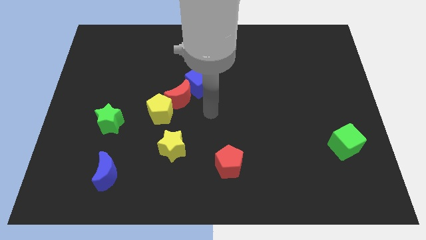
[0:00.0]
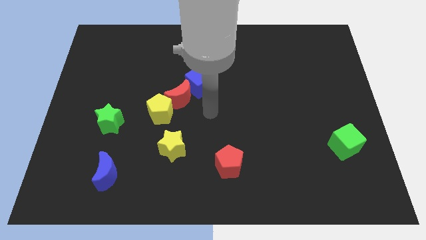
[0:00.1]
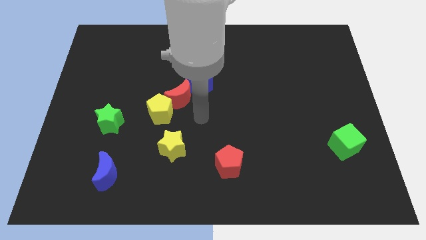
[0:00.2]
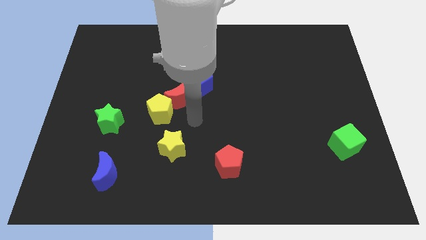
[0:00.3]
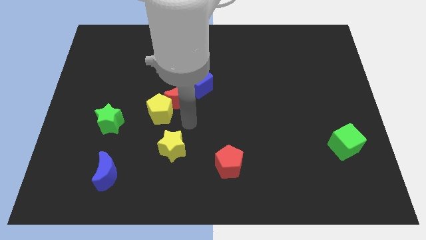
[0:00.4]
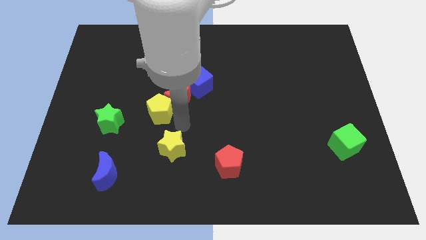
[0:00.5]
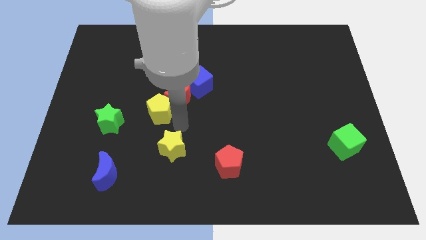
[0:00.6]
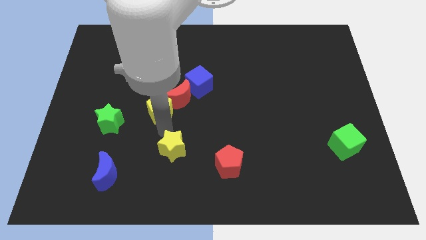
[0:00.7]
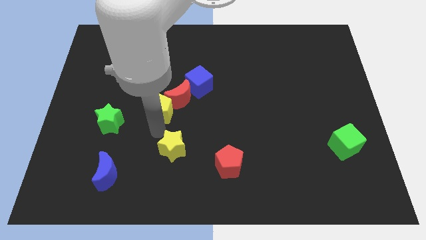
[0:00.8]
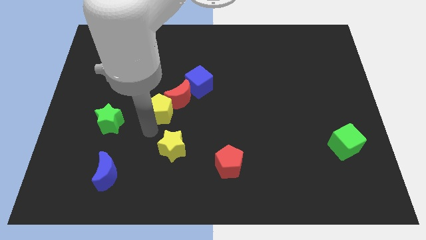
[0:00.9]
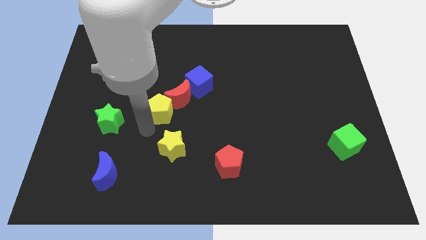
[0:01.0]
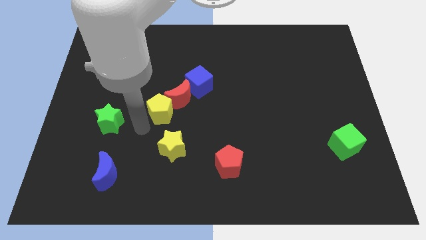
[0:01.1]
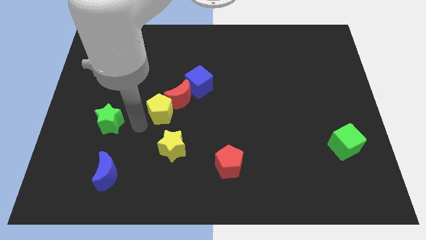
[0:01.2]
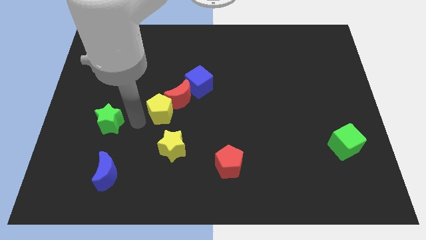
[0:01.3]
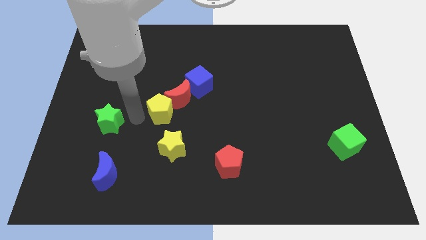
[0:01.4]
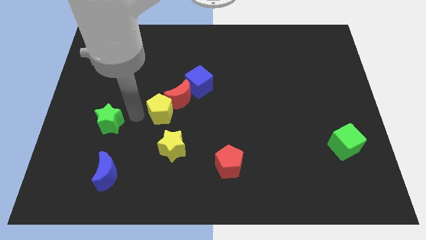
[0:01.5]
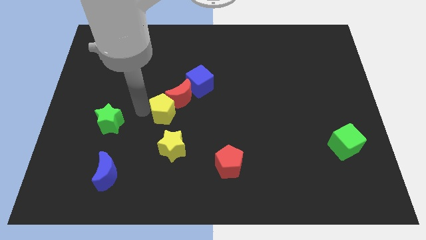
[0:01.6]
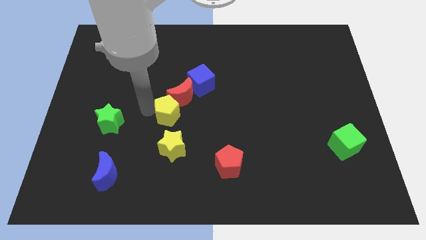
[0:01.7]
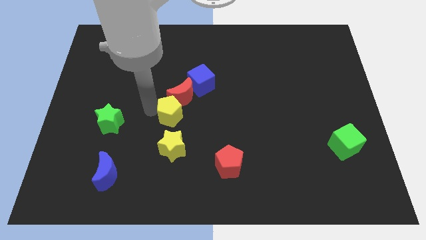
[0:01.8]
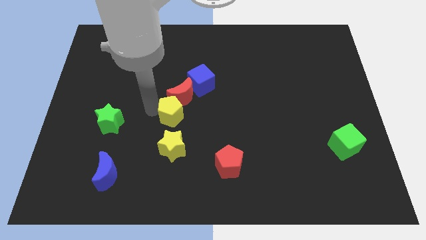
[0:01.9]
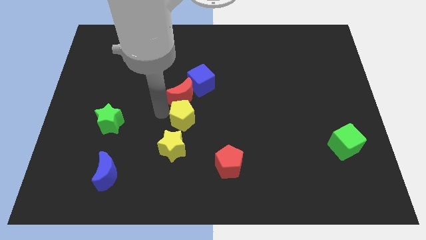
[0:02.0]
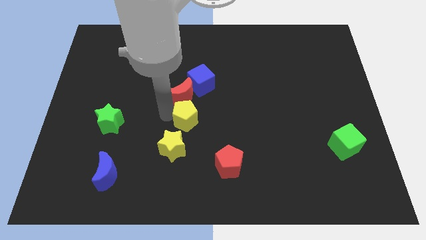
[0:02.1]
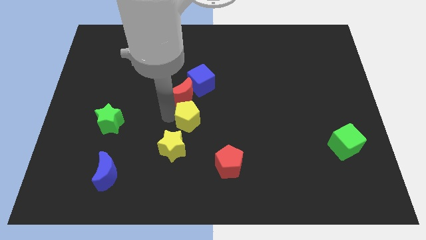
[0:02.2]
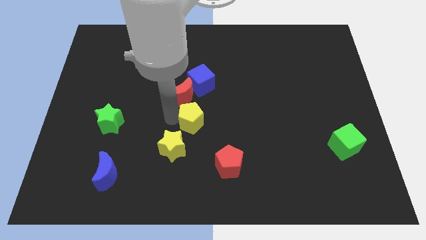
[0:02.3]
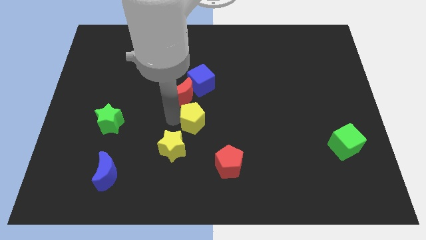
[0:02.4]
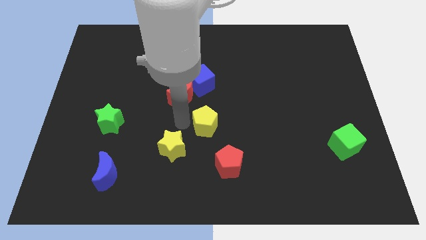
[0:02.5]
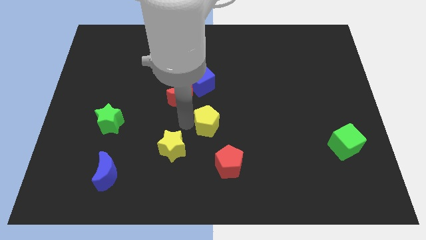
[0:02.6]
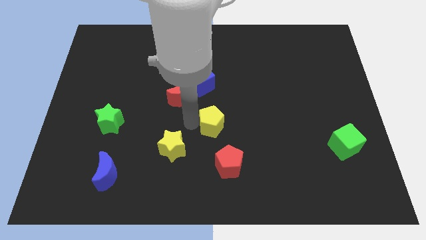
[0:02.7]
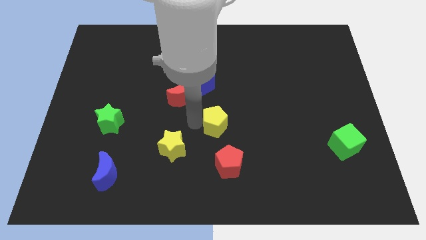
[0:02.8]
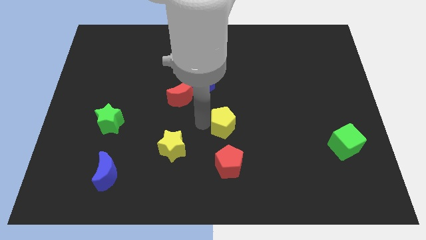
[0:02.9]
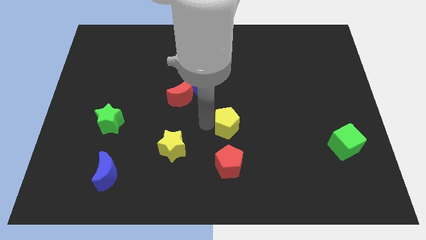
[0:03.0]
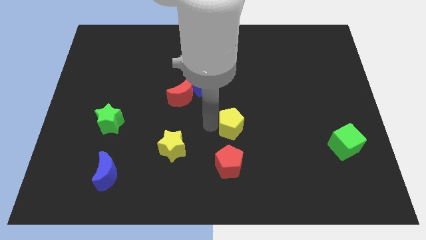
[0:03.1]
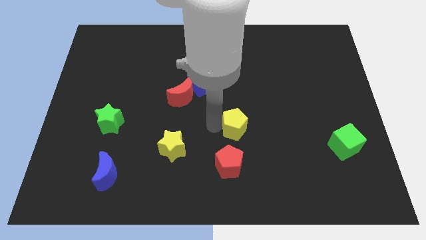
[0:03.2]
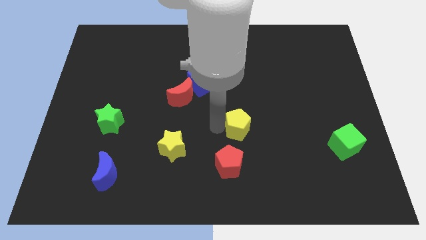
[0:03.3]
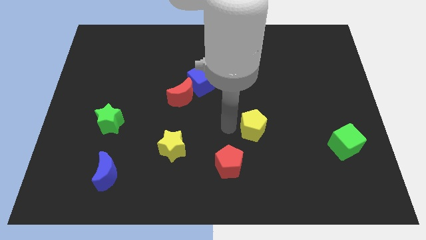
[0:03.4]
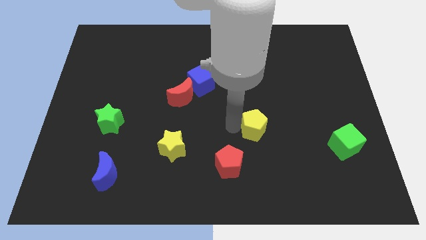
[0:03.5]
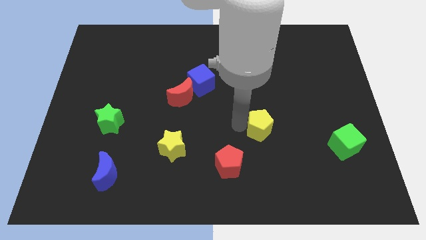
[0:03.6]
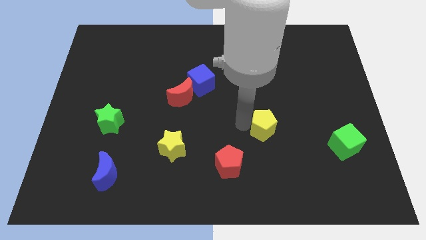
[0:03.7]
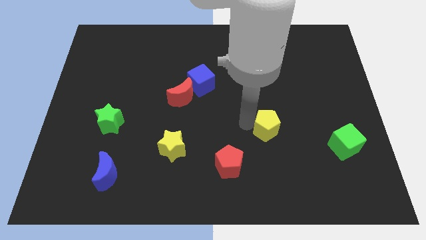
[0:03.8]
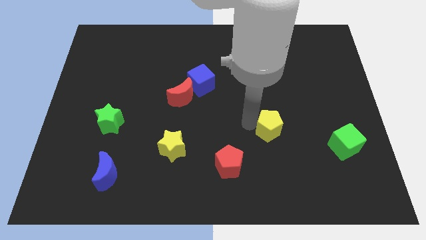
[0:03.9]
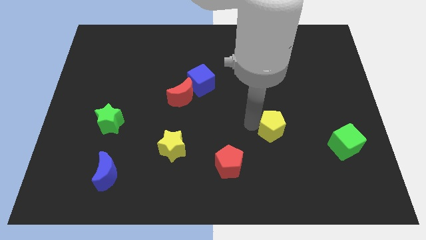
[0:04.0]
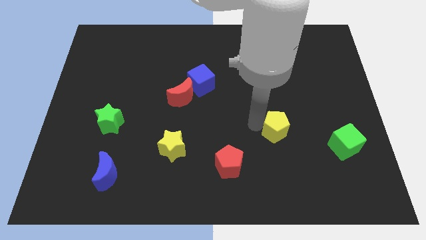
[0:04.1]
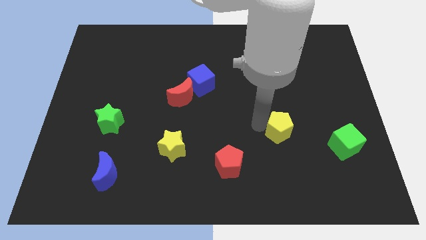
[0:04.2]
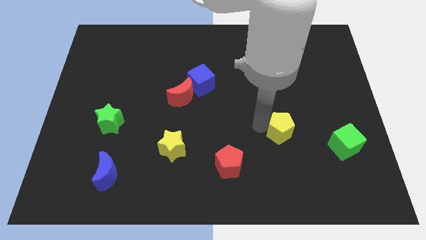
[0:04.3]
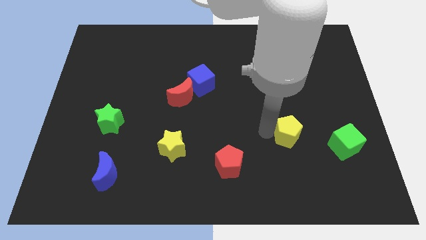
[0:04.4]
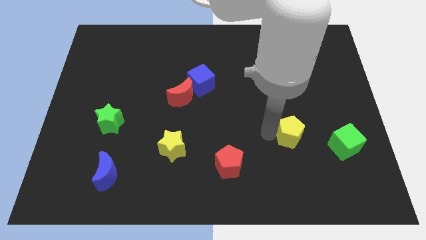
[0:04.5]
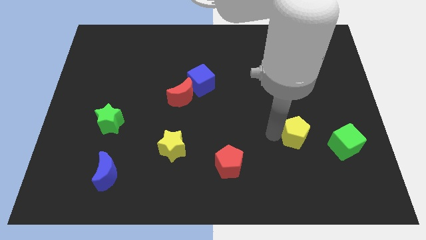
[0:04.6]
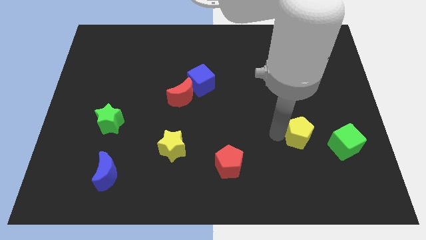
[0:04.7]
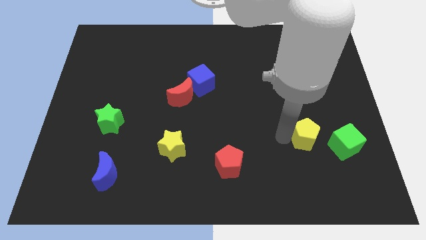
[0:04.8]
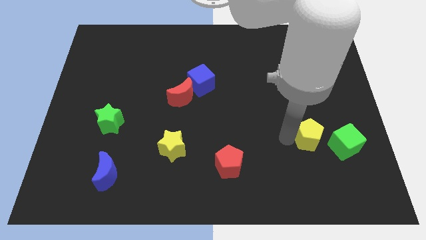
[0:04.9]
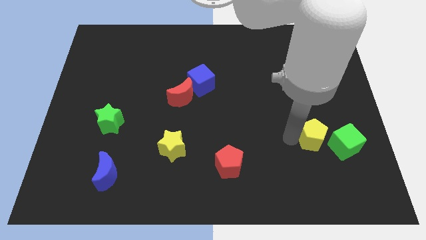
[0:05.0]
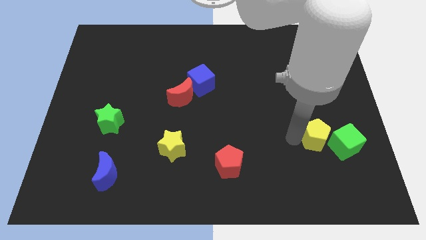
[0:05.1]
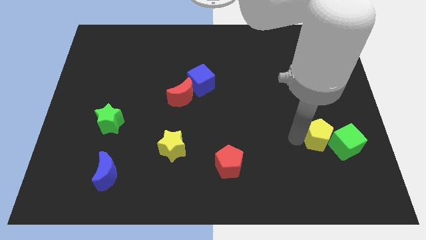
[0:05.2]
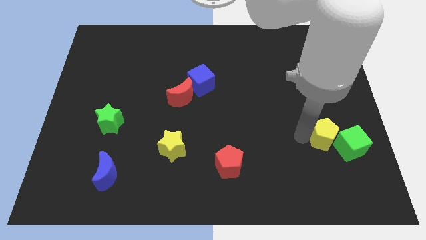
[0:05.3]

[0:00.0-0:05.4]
put the yellow pentagon close to the green cube

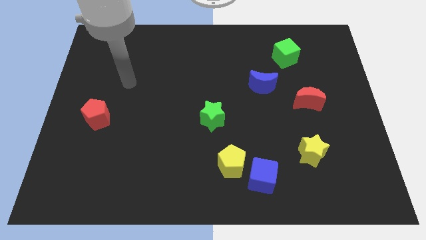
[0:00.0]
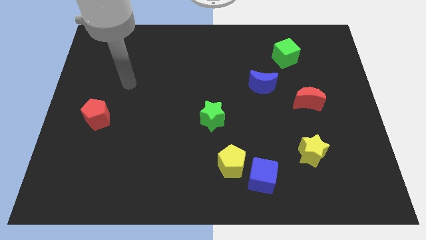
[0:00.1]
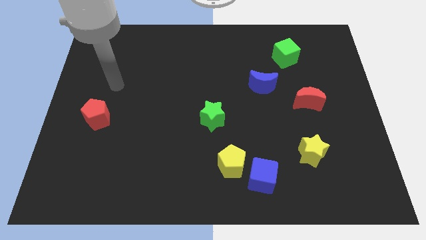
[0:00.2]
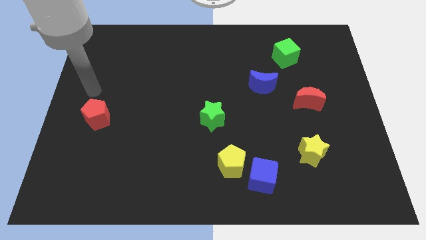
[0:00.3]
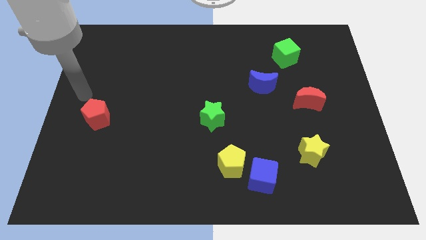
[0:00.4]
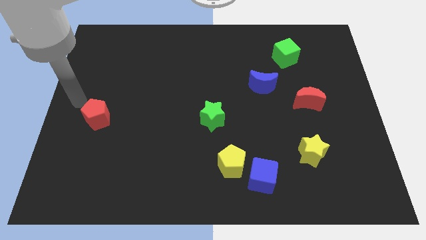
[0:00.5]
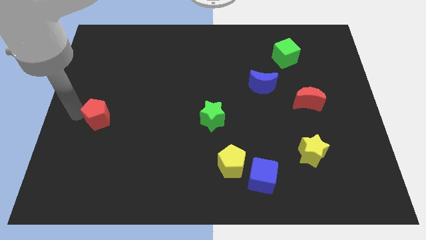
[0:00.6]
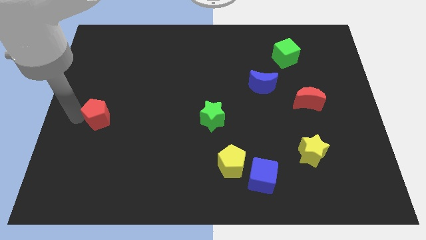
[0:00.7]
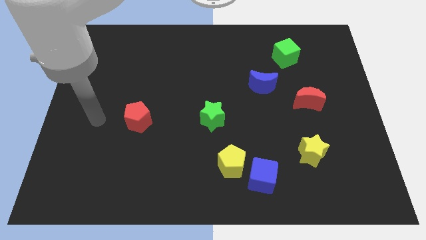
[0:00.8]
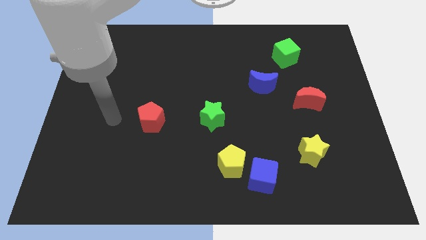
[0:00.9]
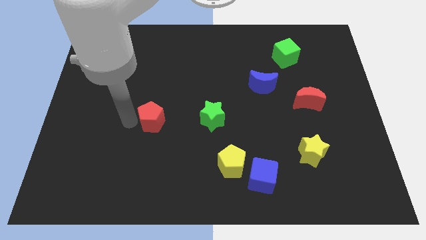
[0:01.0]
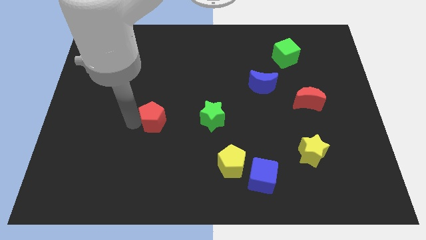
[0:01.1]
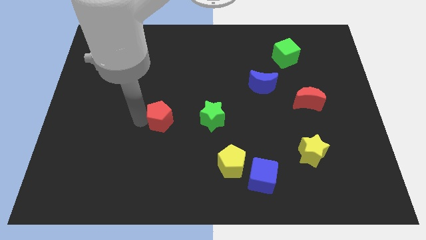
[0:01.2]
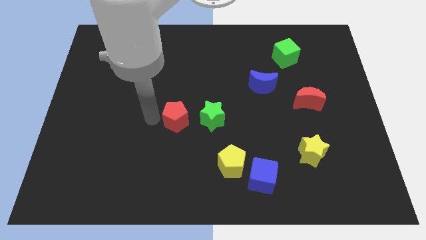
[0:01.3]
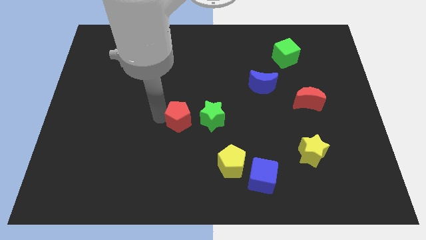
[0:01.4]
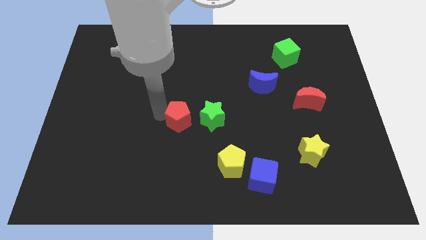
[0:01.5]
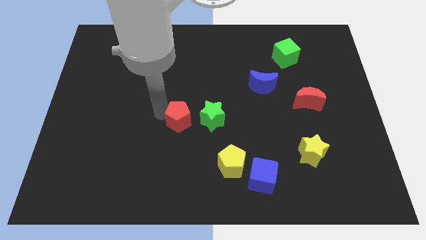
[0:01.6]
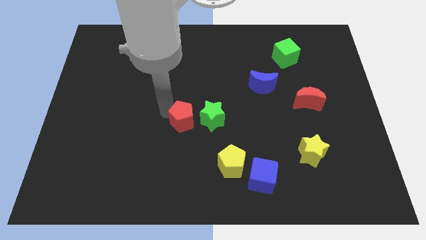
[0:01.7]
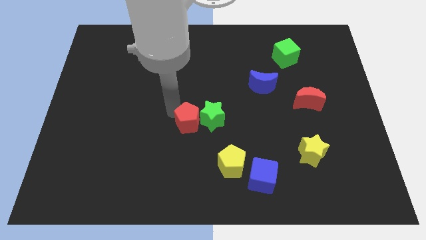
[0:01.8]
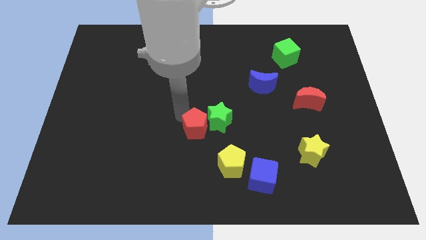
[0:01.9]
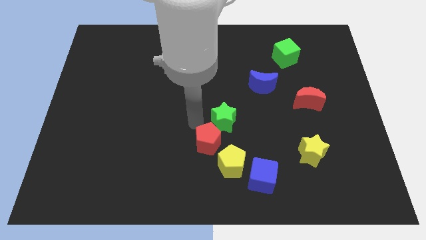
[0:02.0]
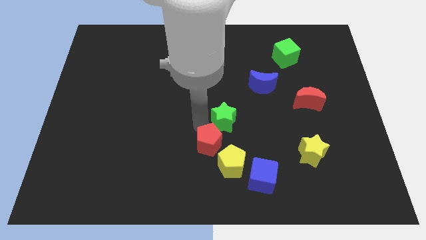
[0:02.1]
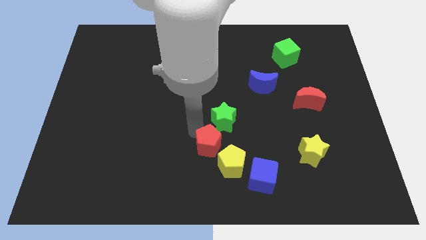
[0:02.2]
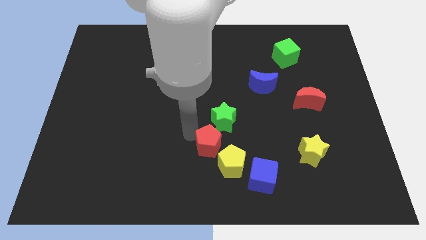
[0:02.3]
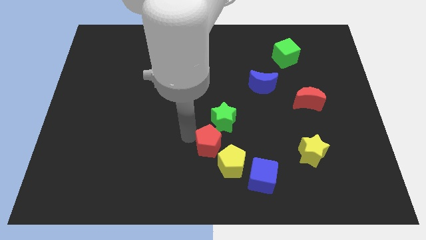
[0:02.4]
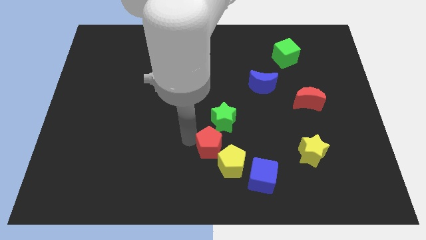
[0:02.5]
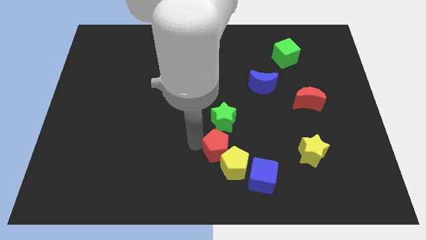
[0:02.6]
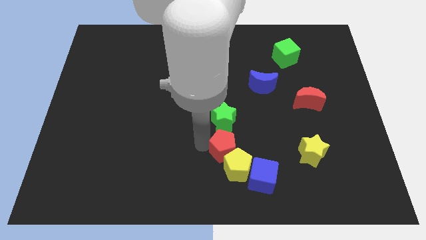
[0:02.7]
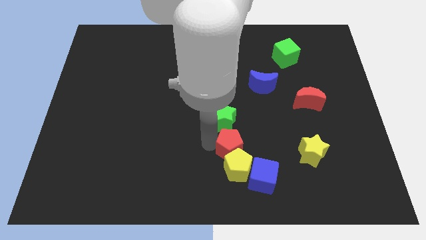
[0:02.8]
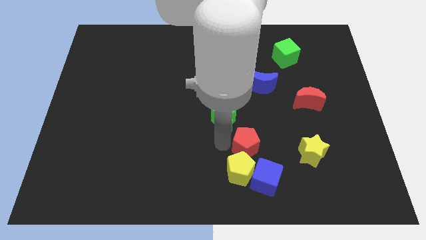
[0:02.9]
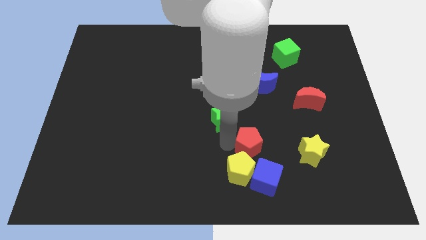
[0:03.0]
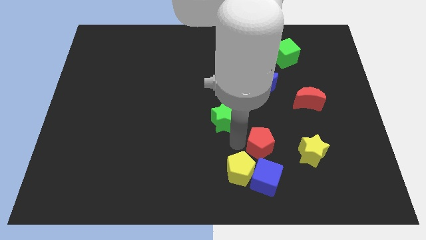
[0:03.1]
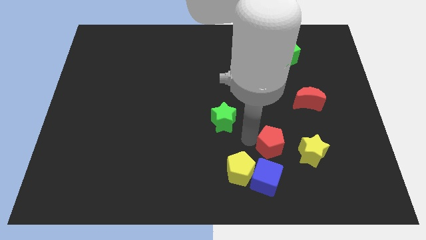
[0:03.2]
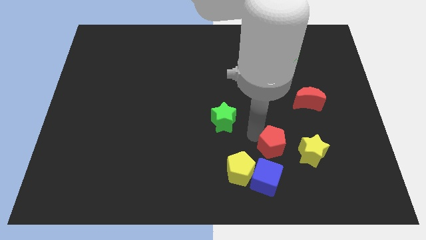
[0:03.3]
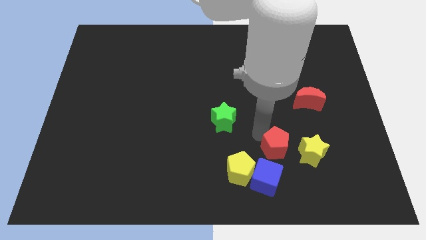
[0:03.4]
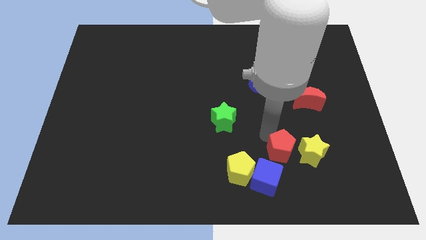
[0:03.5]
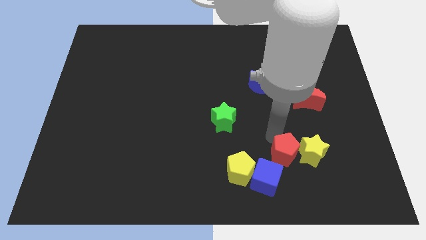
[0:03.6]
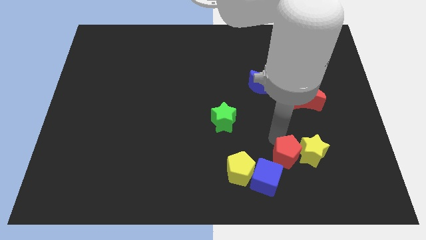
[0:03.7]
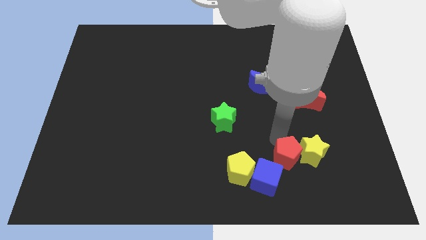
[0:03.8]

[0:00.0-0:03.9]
push the red pentagon close to the yellow star
